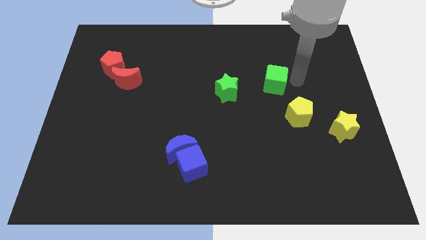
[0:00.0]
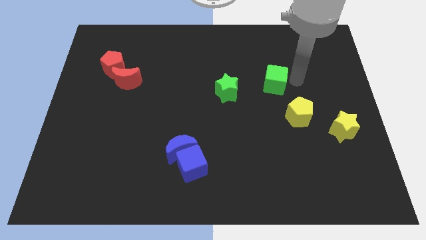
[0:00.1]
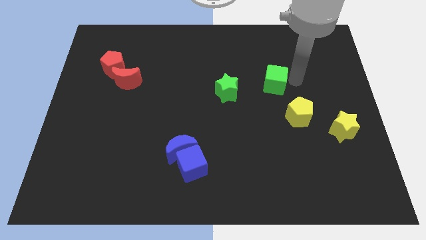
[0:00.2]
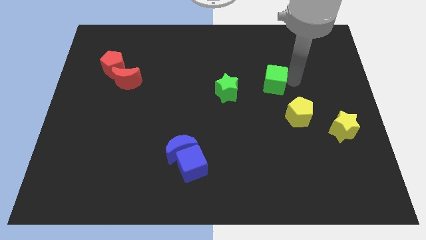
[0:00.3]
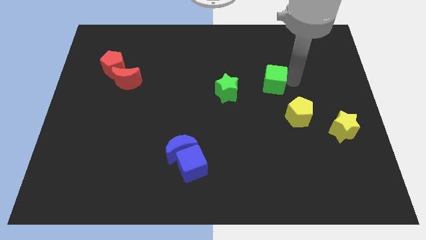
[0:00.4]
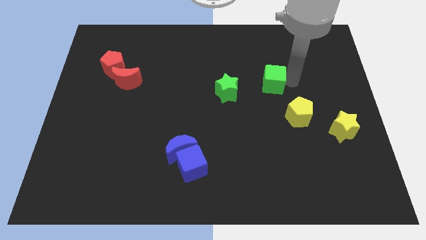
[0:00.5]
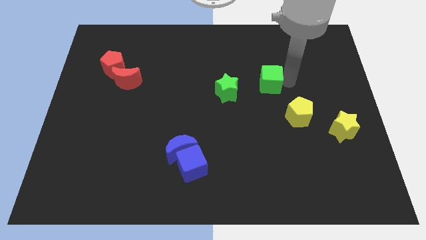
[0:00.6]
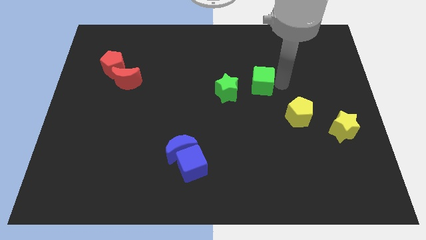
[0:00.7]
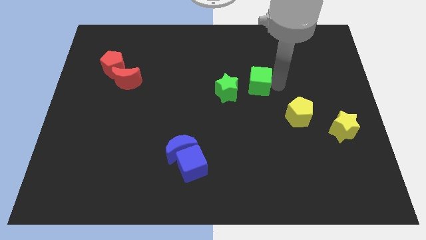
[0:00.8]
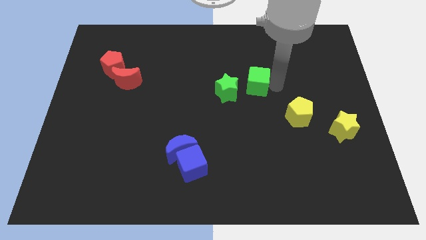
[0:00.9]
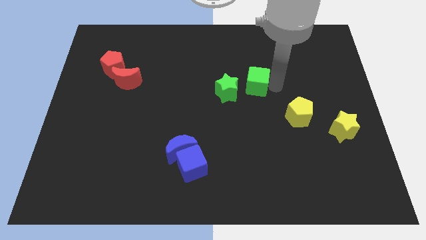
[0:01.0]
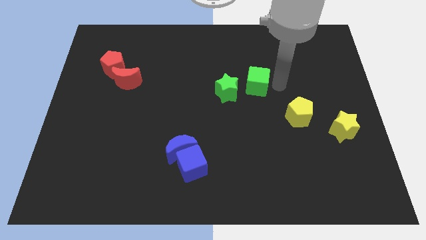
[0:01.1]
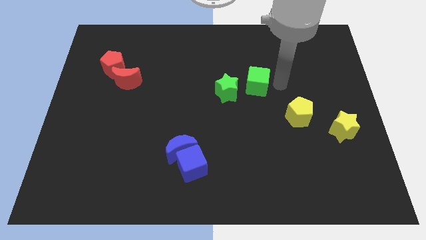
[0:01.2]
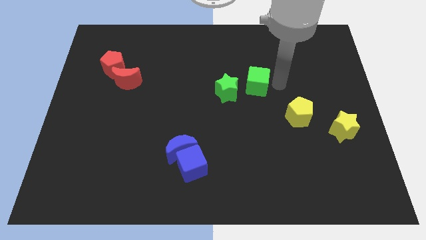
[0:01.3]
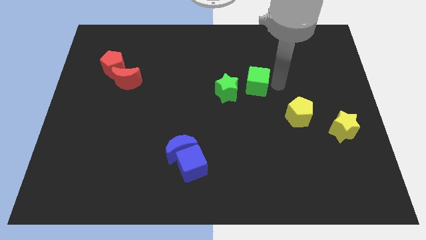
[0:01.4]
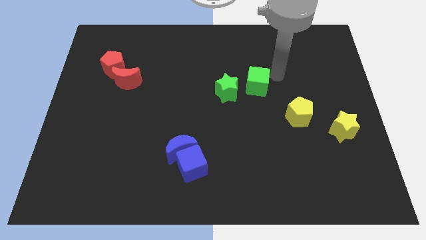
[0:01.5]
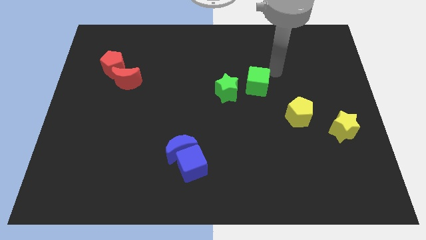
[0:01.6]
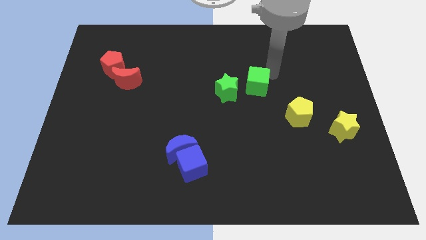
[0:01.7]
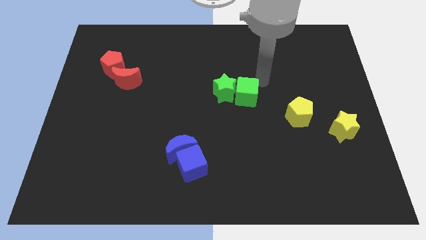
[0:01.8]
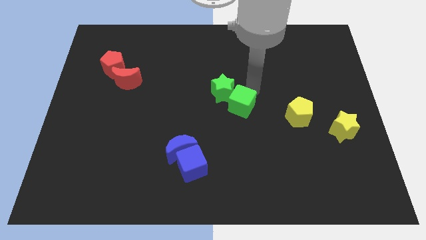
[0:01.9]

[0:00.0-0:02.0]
move the green cube towards the green star

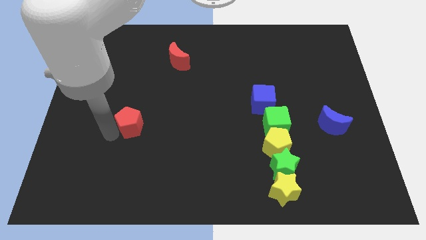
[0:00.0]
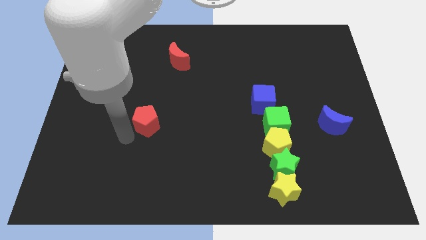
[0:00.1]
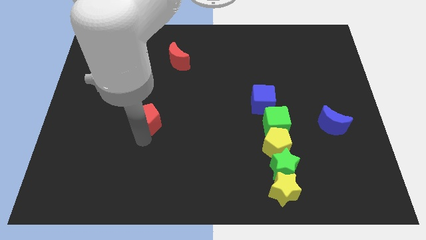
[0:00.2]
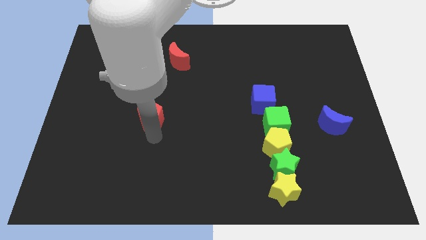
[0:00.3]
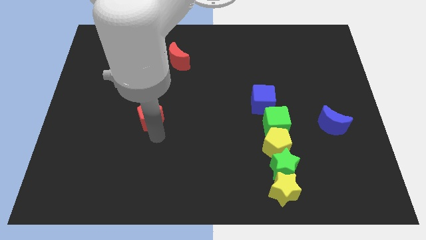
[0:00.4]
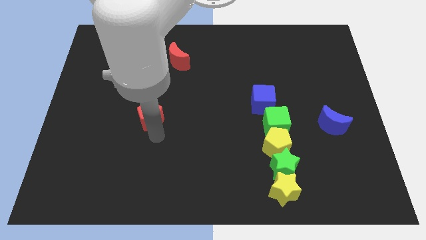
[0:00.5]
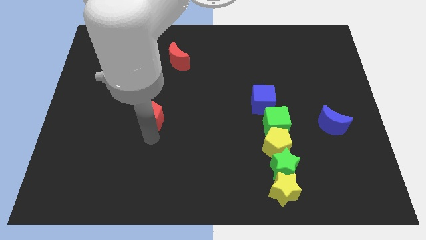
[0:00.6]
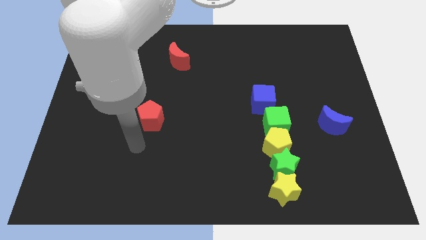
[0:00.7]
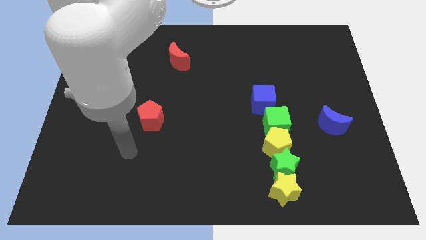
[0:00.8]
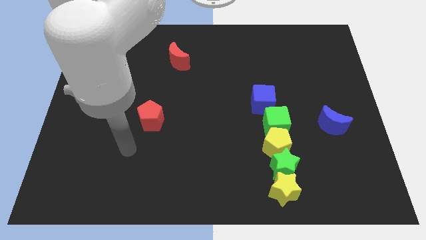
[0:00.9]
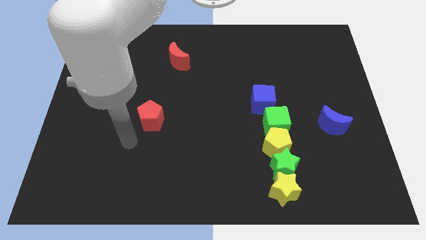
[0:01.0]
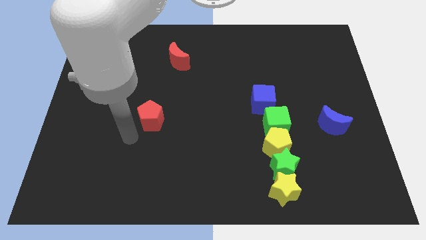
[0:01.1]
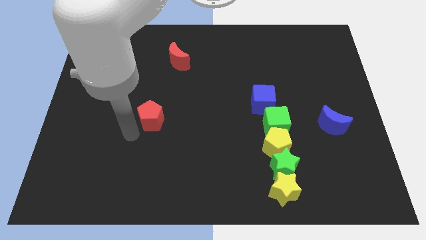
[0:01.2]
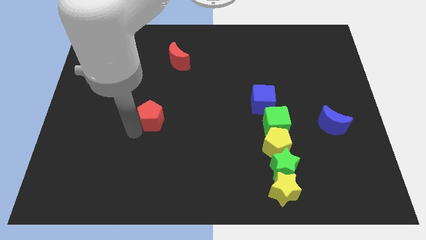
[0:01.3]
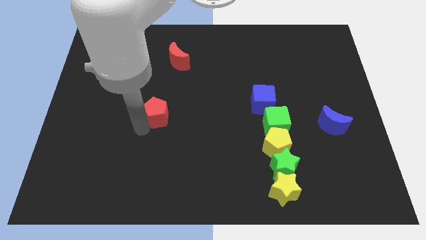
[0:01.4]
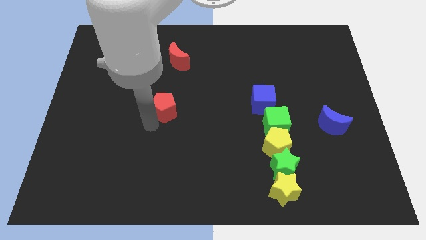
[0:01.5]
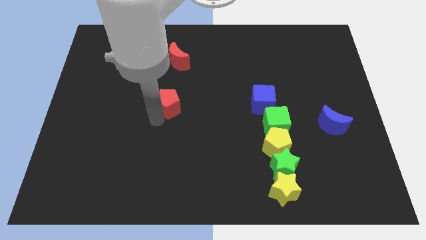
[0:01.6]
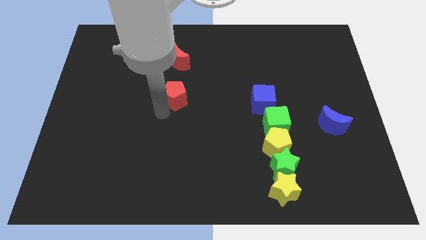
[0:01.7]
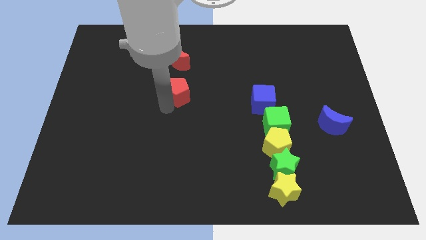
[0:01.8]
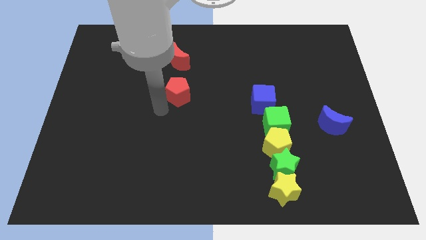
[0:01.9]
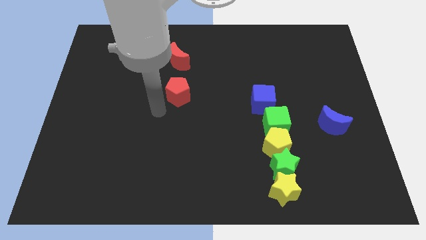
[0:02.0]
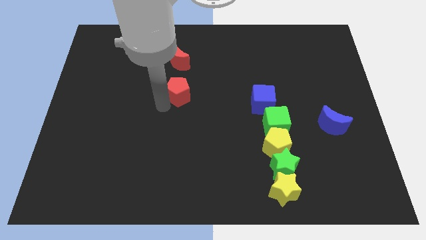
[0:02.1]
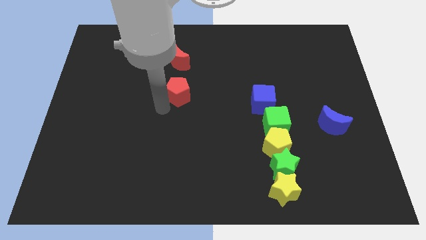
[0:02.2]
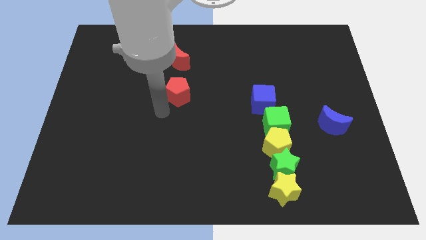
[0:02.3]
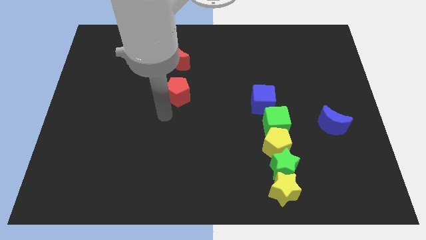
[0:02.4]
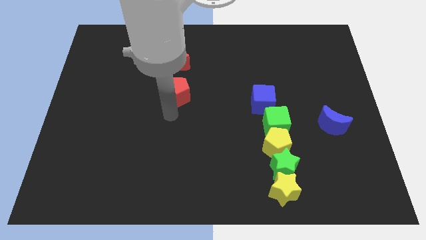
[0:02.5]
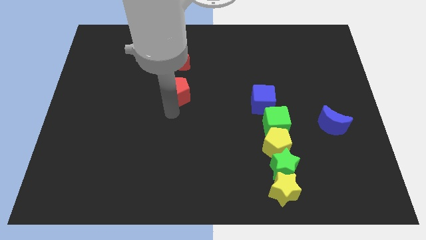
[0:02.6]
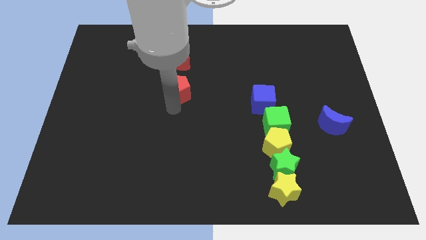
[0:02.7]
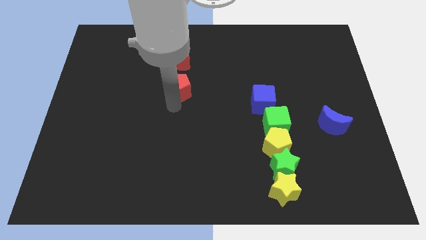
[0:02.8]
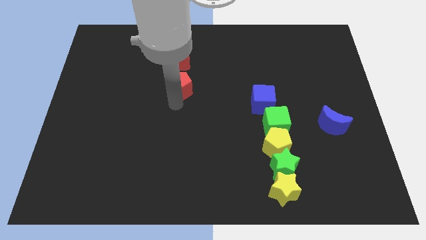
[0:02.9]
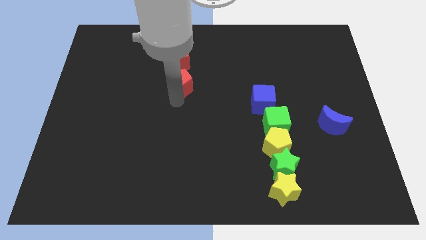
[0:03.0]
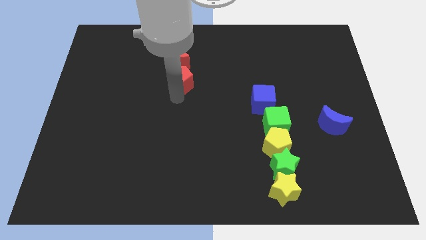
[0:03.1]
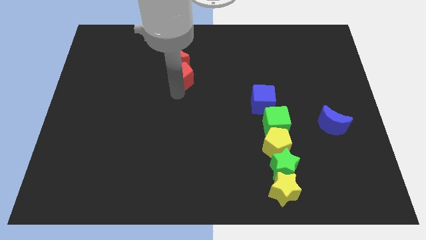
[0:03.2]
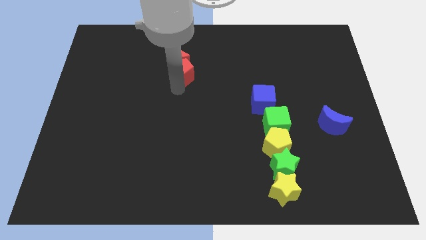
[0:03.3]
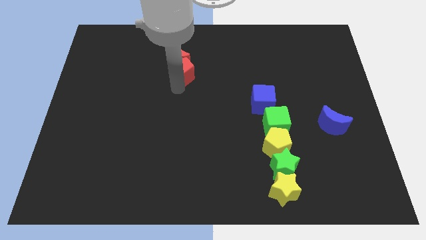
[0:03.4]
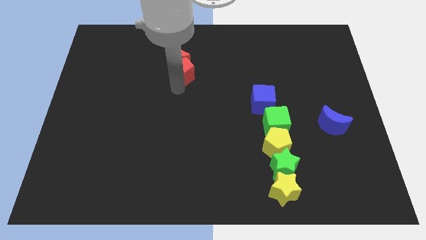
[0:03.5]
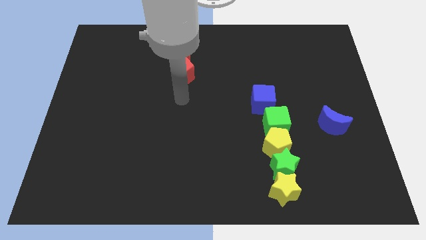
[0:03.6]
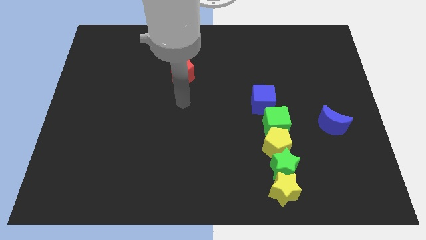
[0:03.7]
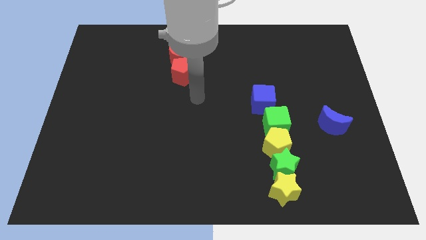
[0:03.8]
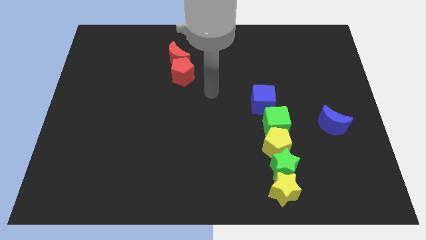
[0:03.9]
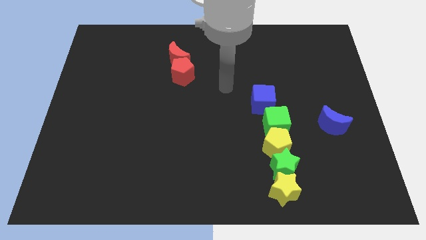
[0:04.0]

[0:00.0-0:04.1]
push the red pentagon into the red moon

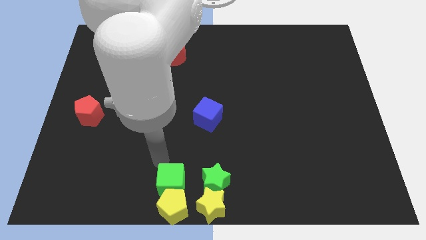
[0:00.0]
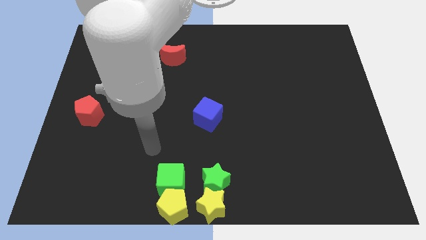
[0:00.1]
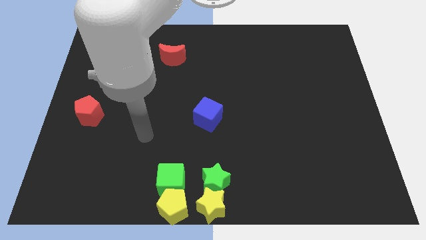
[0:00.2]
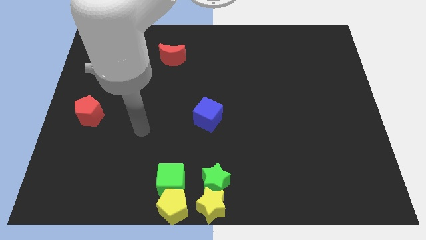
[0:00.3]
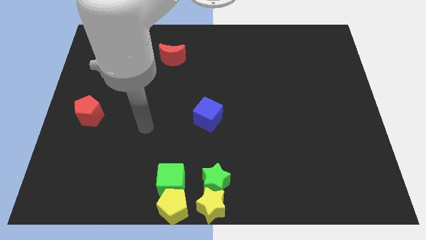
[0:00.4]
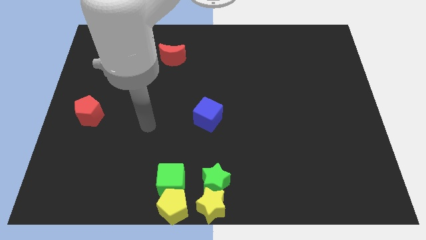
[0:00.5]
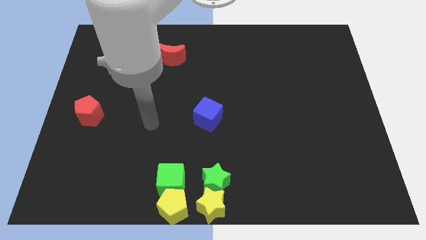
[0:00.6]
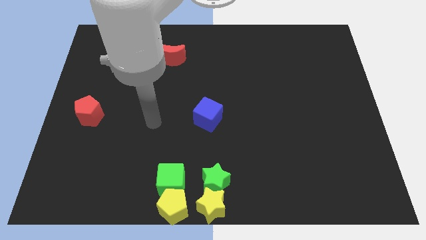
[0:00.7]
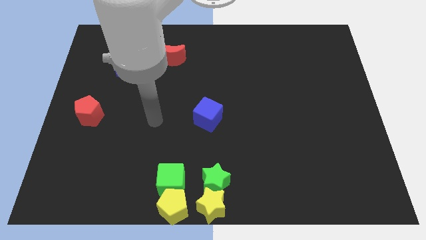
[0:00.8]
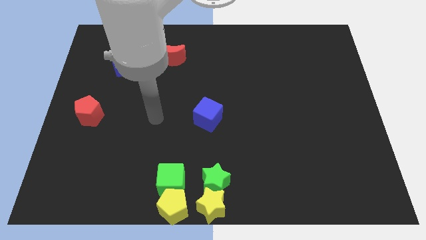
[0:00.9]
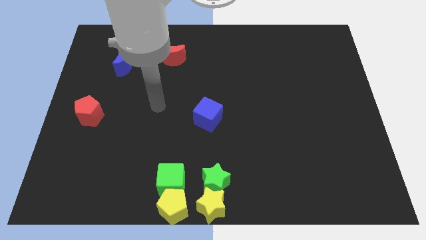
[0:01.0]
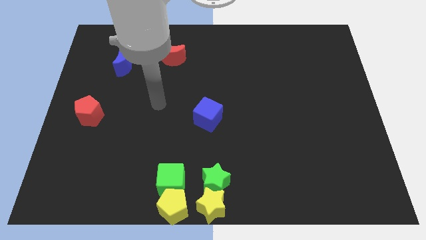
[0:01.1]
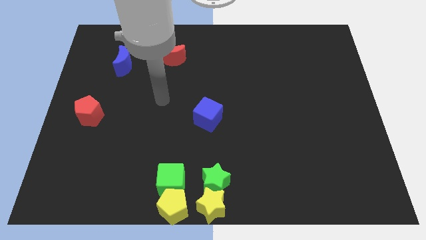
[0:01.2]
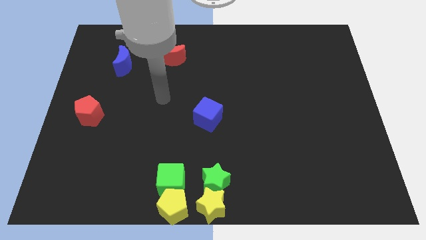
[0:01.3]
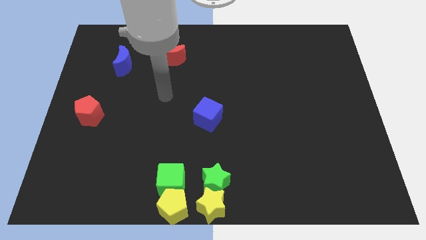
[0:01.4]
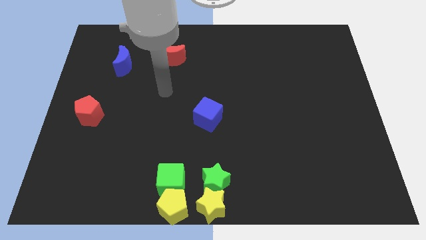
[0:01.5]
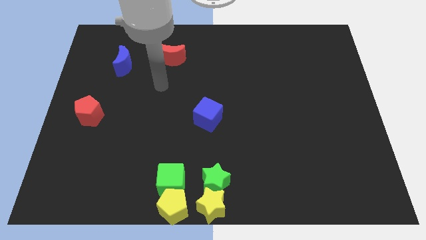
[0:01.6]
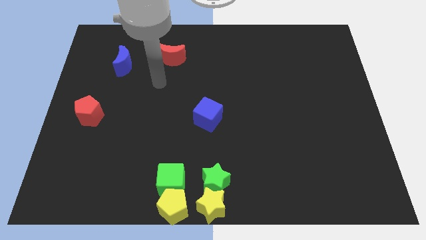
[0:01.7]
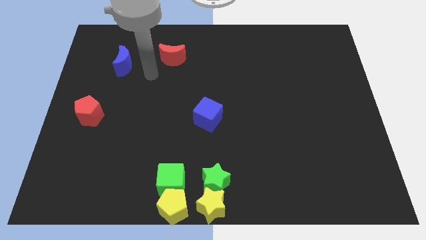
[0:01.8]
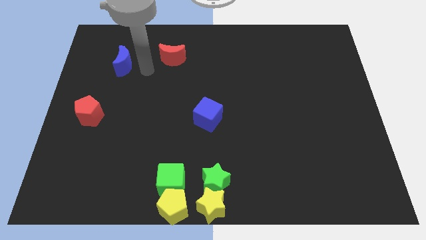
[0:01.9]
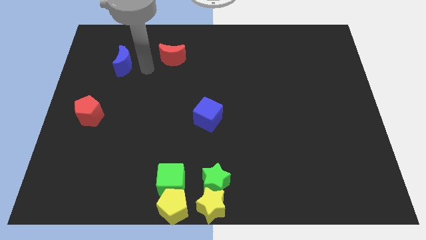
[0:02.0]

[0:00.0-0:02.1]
move the arm to the right of the blue crescent

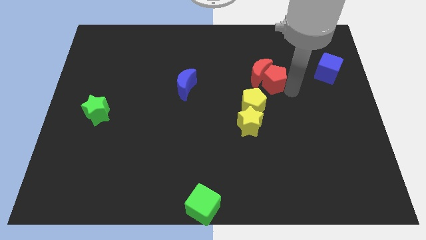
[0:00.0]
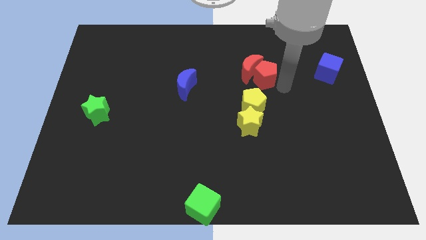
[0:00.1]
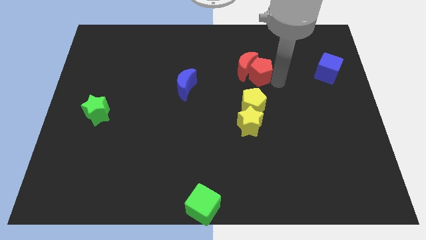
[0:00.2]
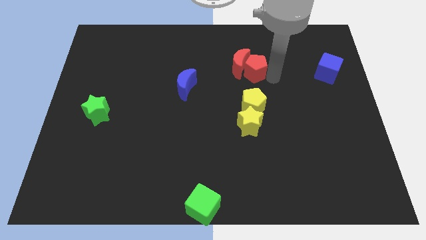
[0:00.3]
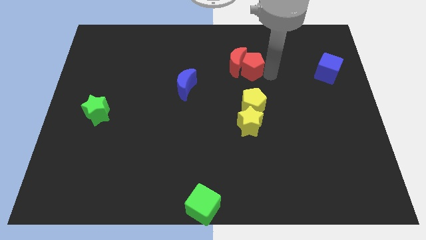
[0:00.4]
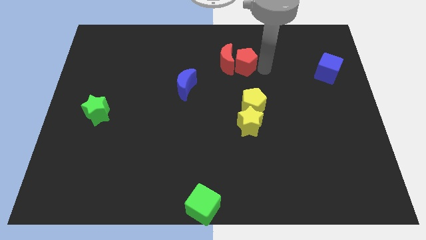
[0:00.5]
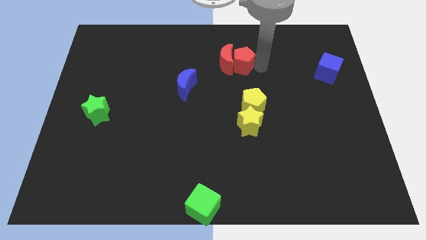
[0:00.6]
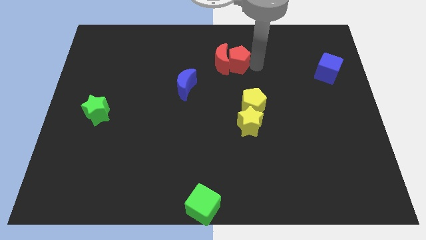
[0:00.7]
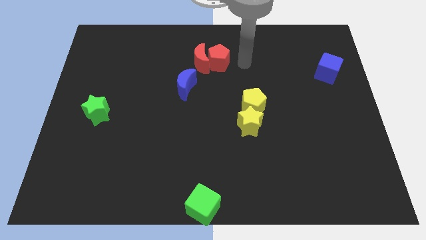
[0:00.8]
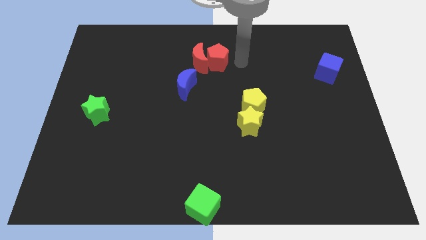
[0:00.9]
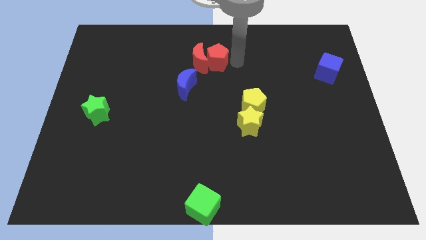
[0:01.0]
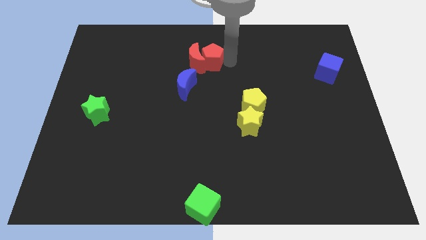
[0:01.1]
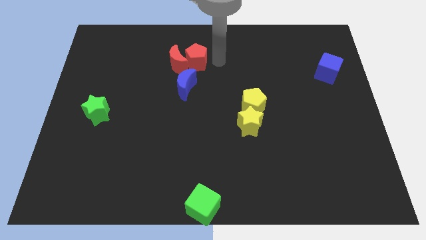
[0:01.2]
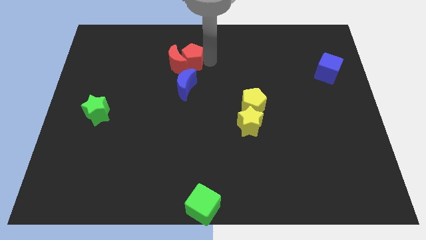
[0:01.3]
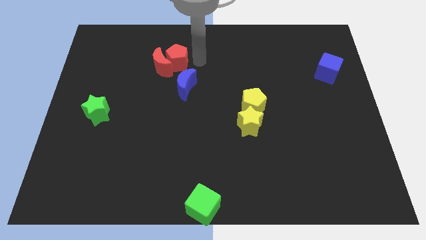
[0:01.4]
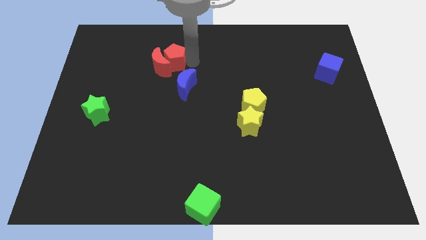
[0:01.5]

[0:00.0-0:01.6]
push the red pentagon along the red moon to the top left to the blue crescent
